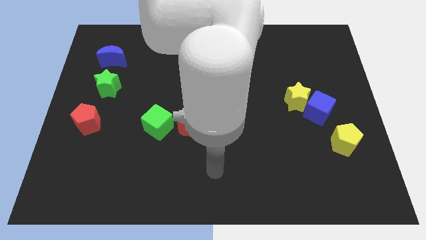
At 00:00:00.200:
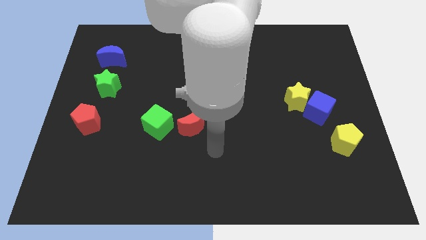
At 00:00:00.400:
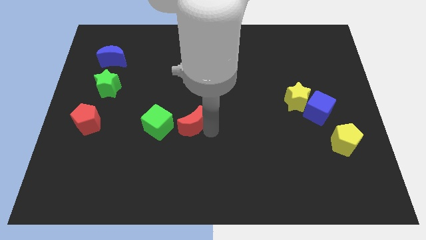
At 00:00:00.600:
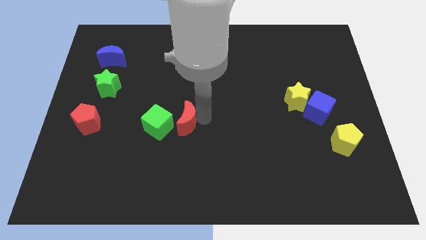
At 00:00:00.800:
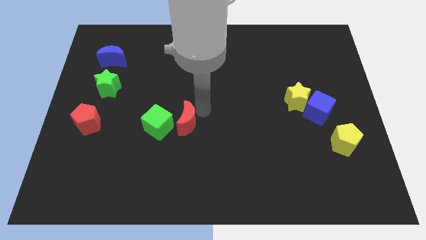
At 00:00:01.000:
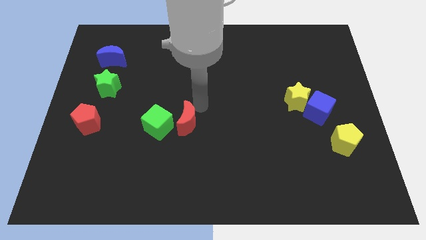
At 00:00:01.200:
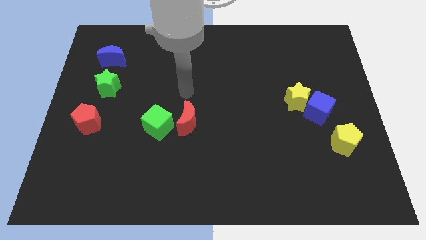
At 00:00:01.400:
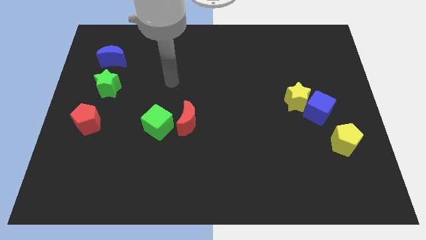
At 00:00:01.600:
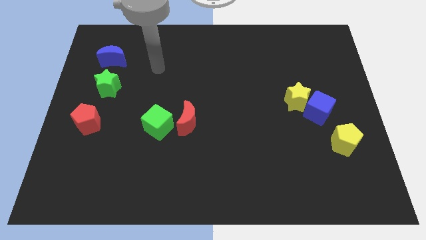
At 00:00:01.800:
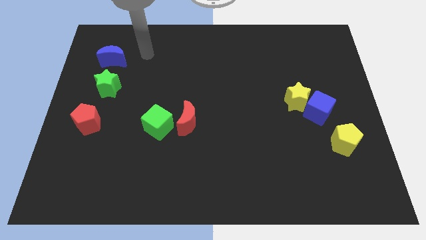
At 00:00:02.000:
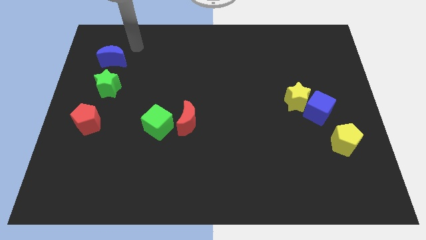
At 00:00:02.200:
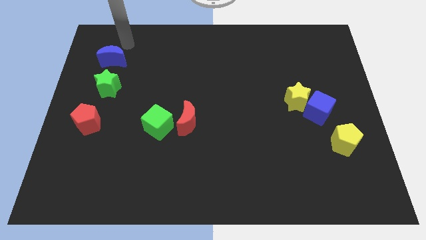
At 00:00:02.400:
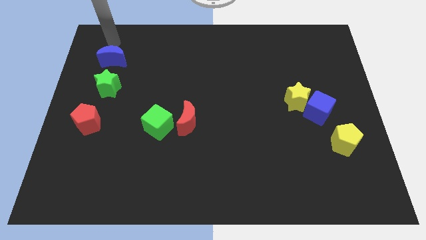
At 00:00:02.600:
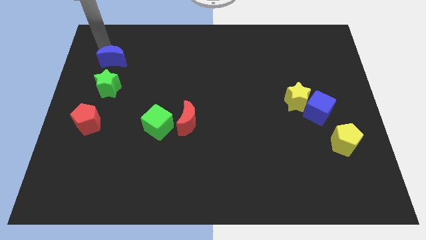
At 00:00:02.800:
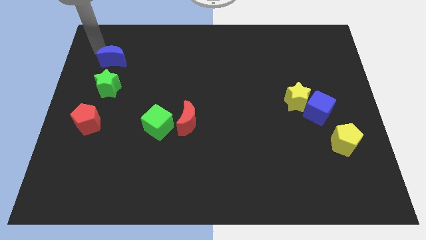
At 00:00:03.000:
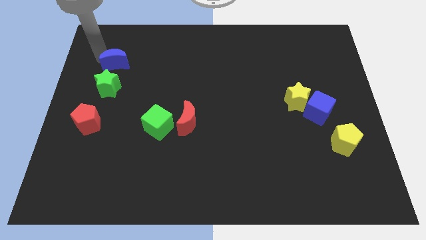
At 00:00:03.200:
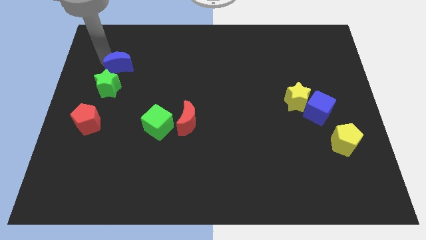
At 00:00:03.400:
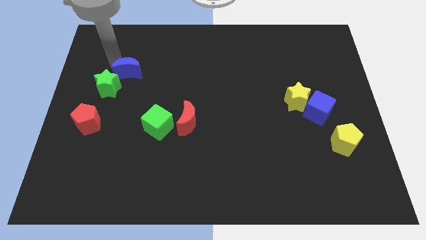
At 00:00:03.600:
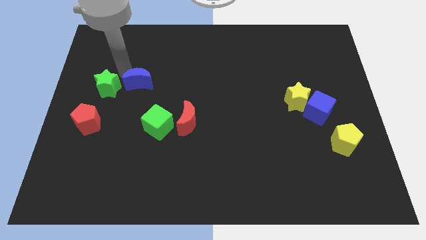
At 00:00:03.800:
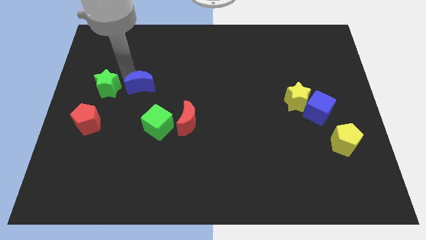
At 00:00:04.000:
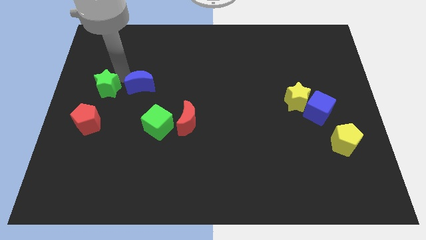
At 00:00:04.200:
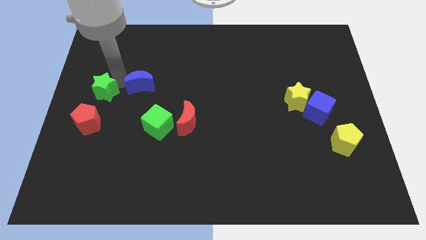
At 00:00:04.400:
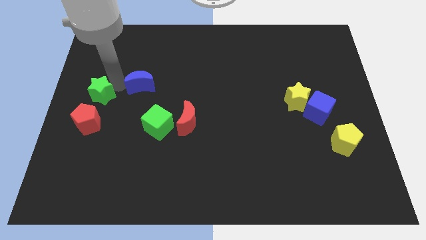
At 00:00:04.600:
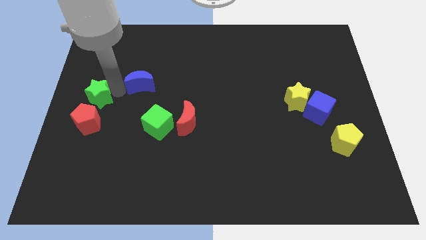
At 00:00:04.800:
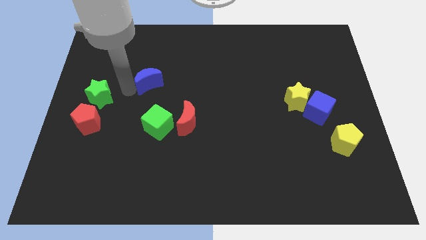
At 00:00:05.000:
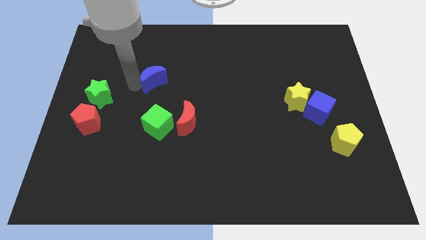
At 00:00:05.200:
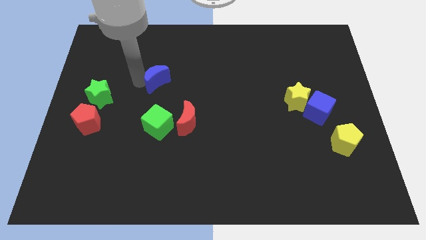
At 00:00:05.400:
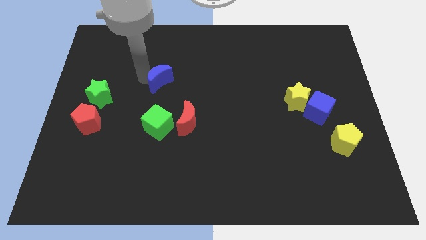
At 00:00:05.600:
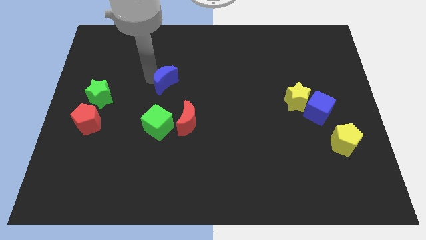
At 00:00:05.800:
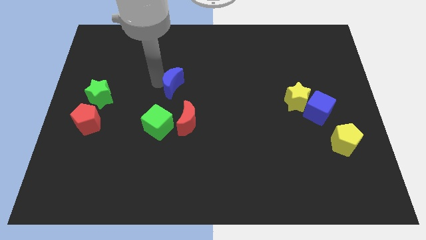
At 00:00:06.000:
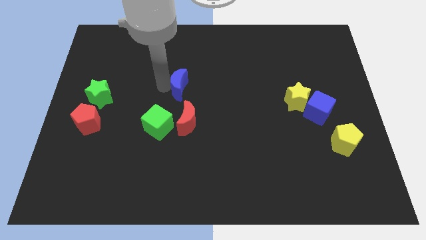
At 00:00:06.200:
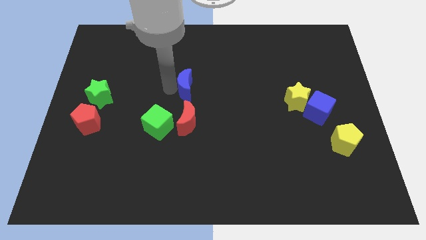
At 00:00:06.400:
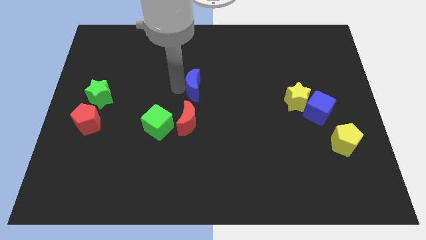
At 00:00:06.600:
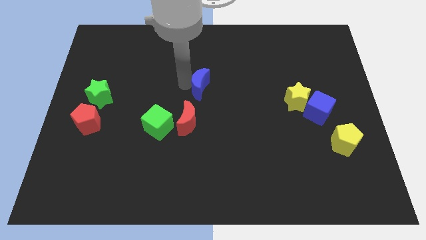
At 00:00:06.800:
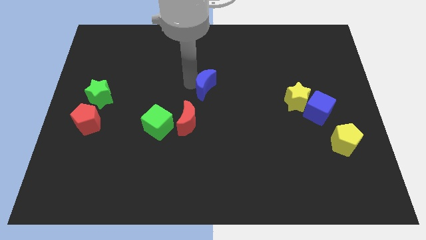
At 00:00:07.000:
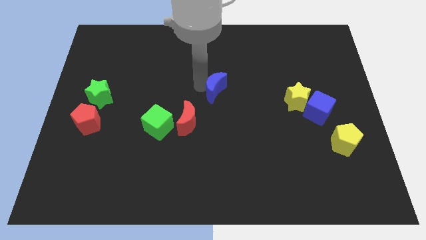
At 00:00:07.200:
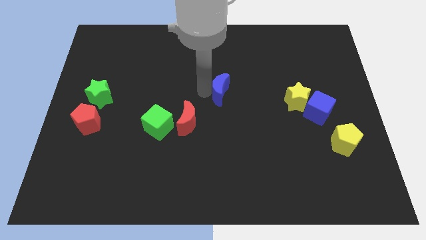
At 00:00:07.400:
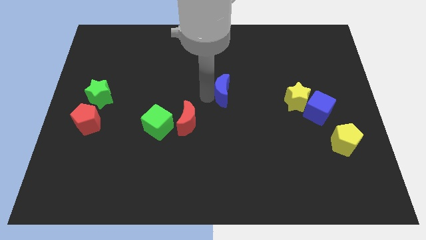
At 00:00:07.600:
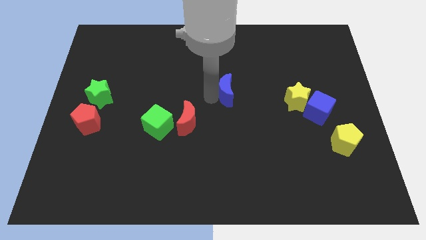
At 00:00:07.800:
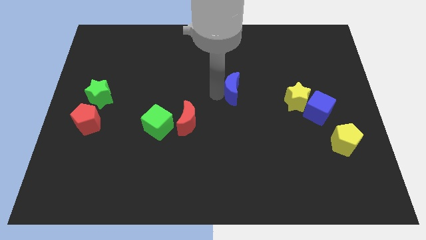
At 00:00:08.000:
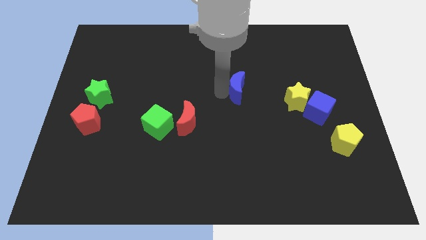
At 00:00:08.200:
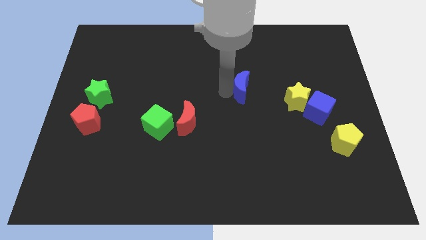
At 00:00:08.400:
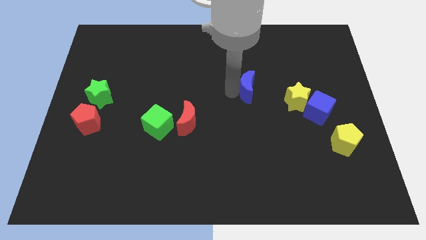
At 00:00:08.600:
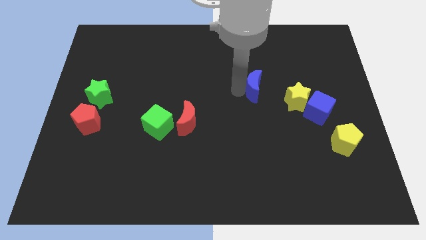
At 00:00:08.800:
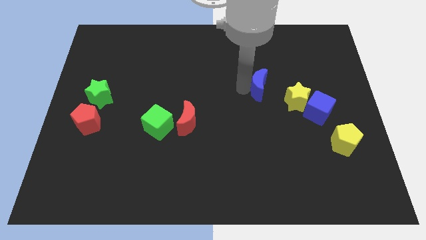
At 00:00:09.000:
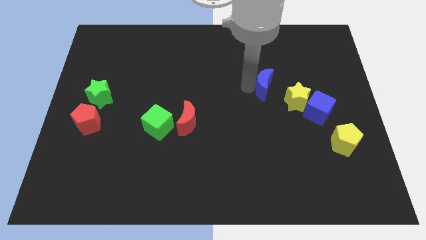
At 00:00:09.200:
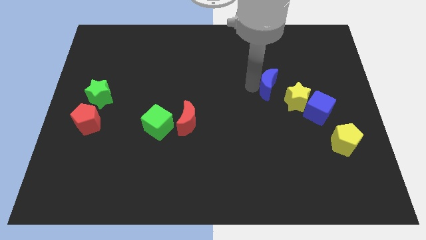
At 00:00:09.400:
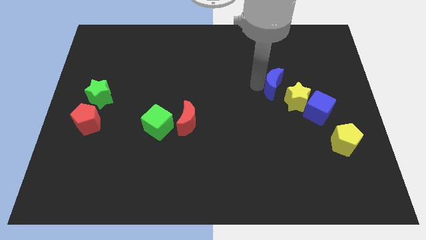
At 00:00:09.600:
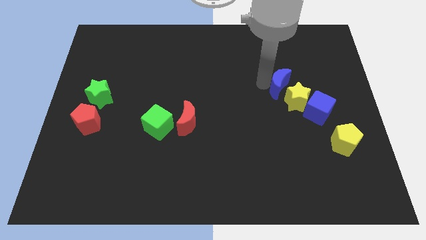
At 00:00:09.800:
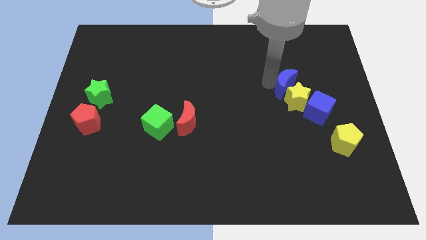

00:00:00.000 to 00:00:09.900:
push the blue moon close to the yellow star

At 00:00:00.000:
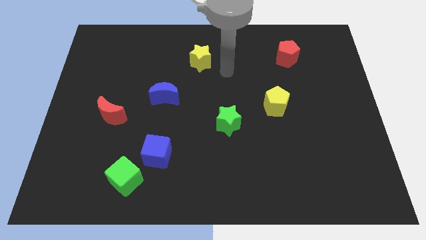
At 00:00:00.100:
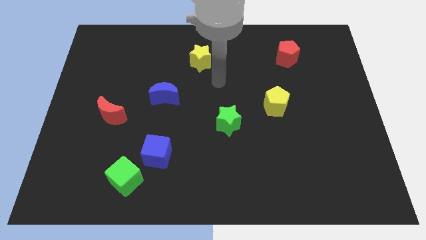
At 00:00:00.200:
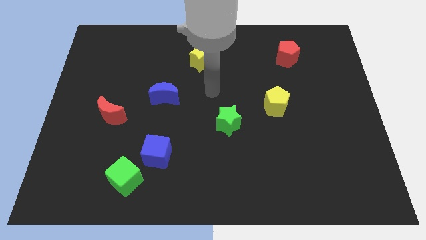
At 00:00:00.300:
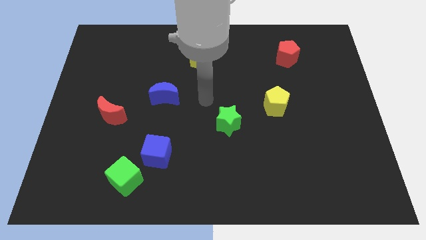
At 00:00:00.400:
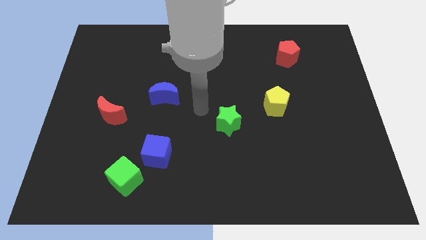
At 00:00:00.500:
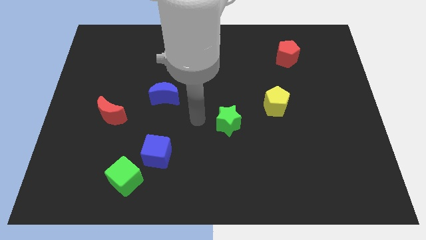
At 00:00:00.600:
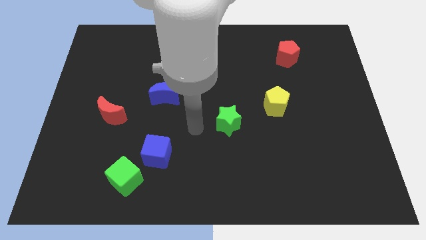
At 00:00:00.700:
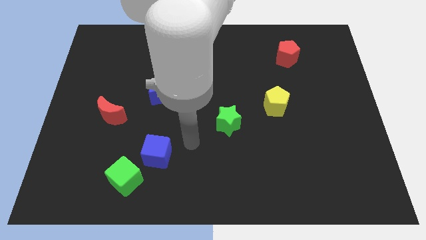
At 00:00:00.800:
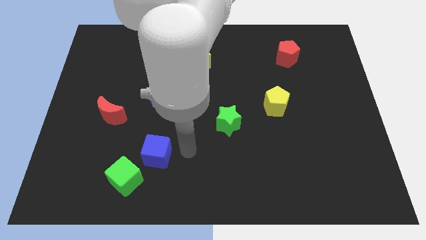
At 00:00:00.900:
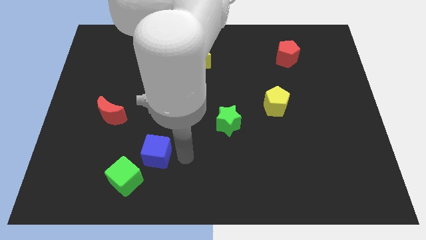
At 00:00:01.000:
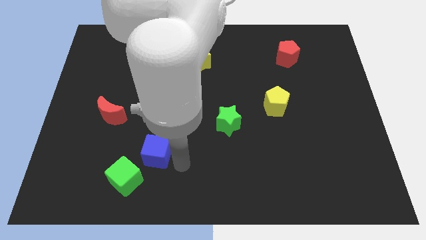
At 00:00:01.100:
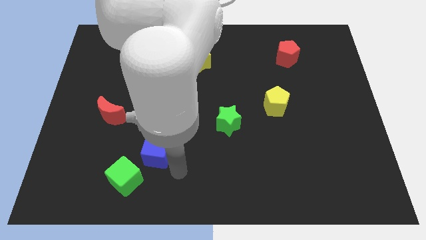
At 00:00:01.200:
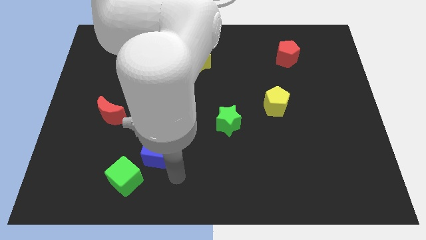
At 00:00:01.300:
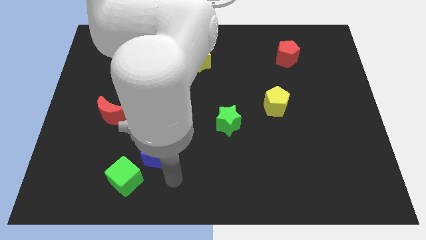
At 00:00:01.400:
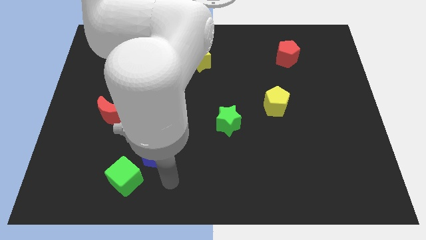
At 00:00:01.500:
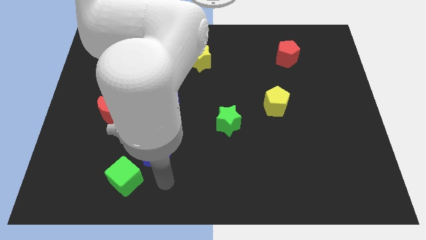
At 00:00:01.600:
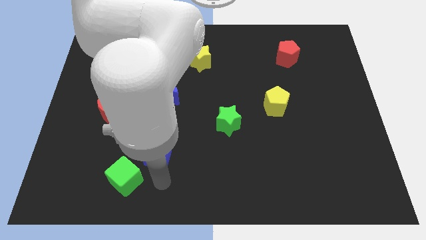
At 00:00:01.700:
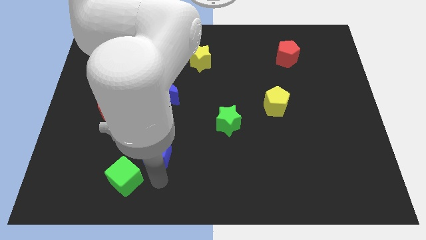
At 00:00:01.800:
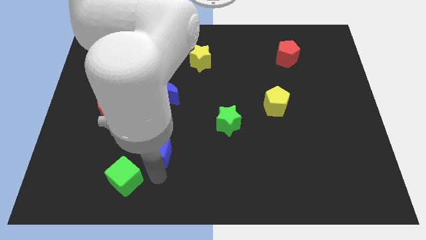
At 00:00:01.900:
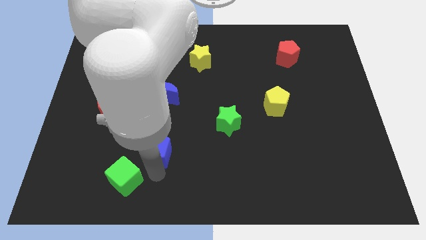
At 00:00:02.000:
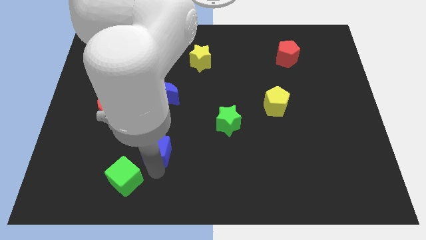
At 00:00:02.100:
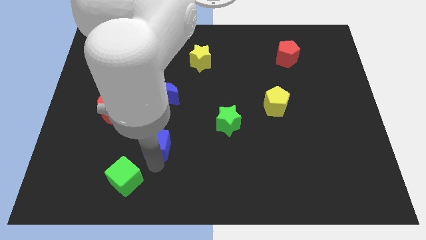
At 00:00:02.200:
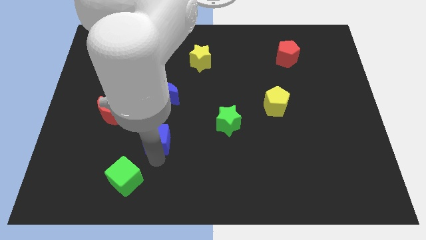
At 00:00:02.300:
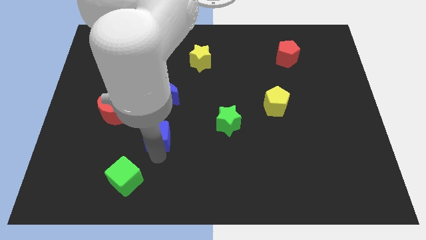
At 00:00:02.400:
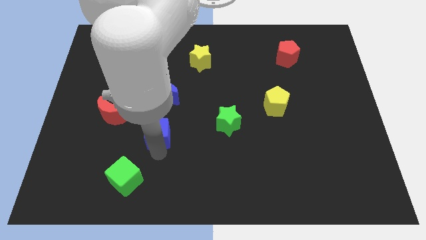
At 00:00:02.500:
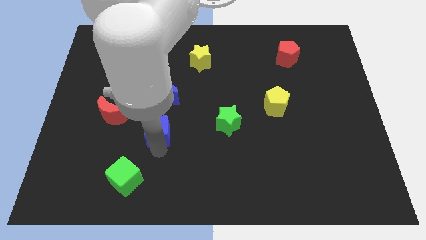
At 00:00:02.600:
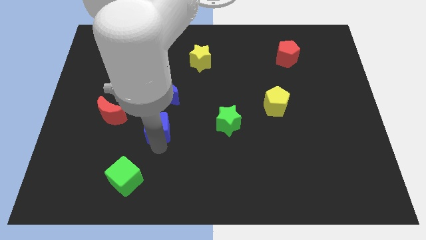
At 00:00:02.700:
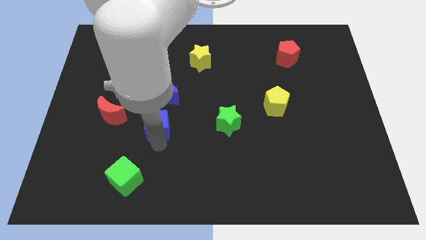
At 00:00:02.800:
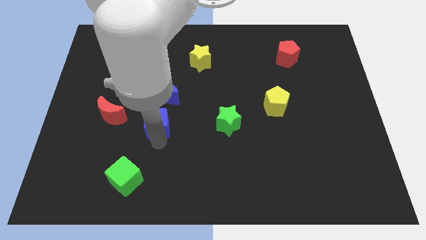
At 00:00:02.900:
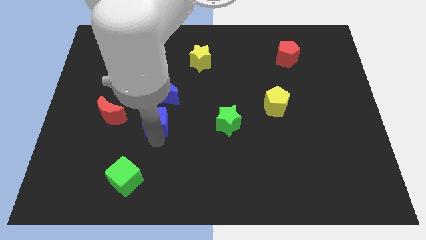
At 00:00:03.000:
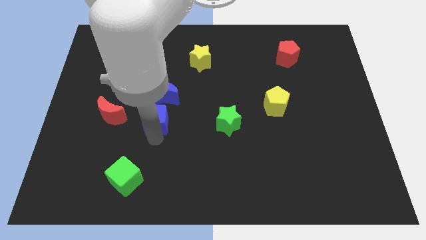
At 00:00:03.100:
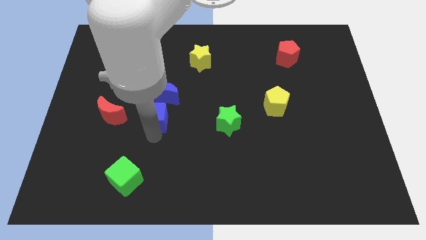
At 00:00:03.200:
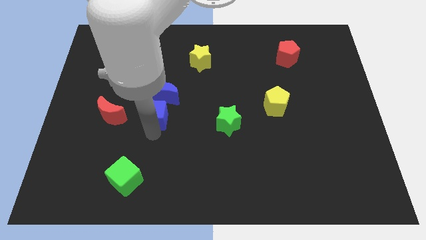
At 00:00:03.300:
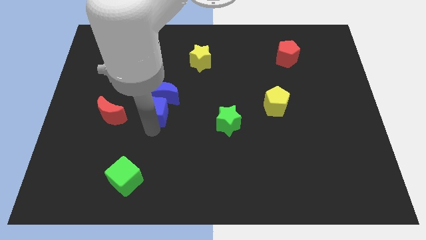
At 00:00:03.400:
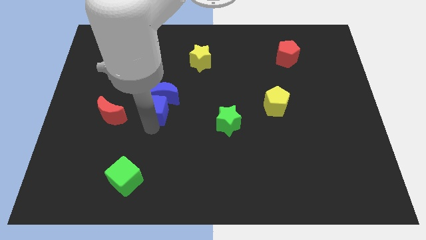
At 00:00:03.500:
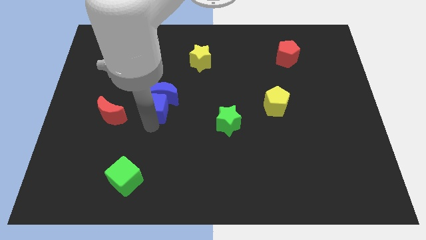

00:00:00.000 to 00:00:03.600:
put the blue cube to the blue moon
